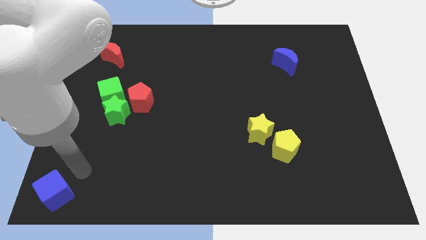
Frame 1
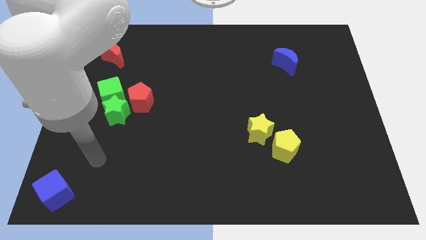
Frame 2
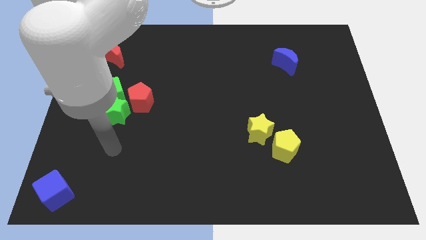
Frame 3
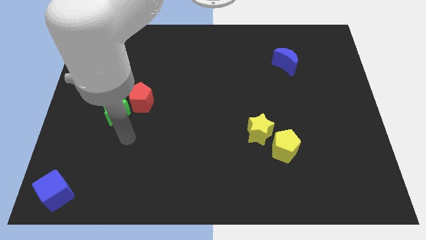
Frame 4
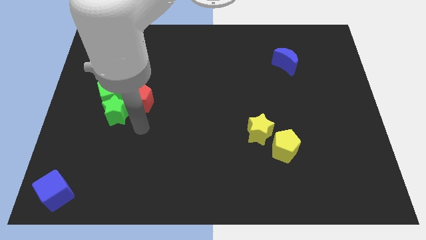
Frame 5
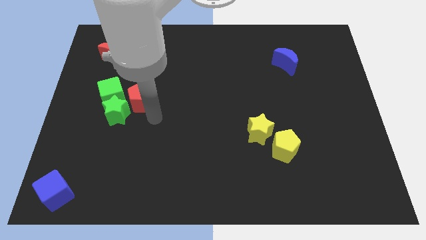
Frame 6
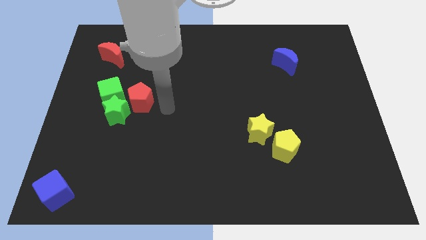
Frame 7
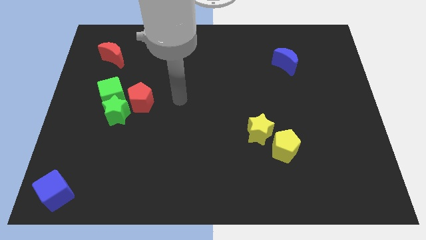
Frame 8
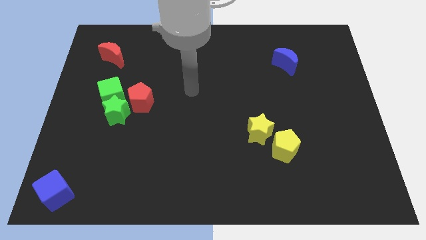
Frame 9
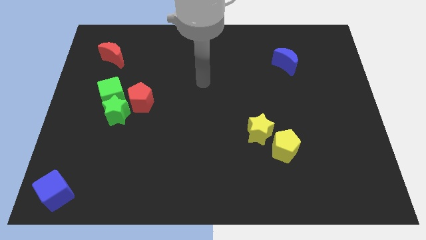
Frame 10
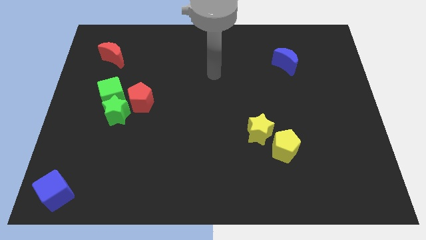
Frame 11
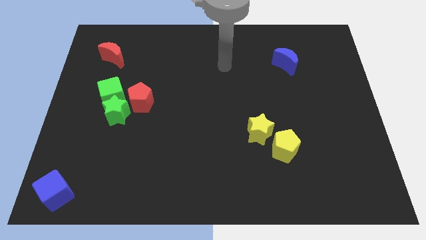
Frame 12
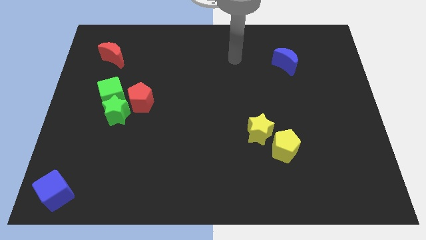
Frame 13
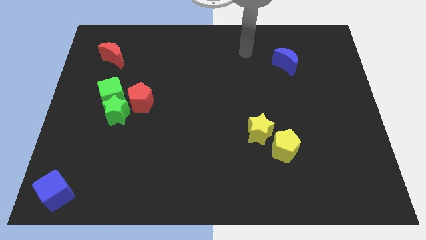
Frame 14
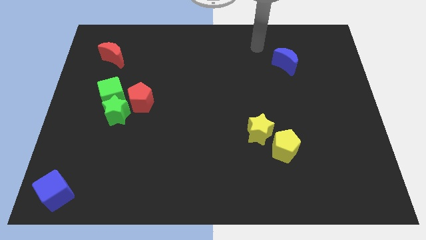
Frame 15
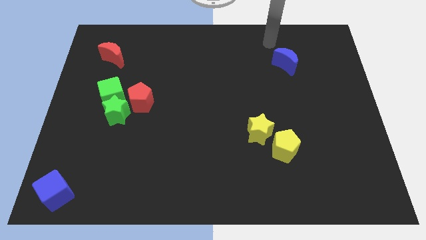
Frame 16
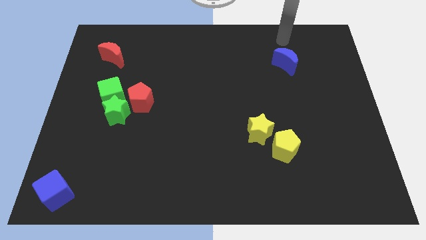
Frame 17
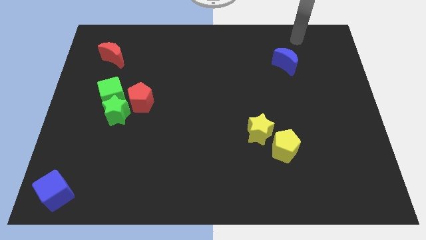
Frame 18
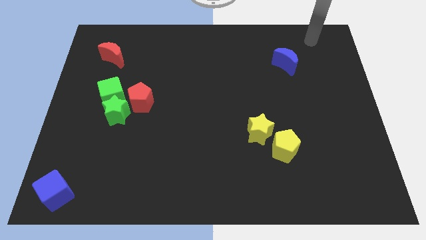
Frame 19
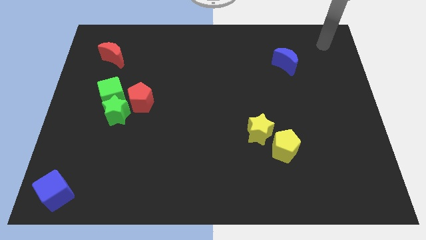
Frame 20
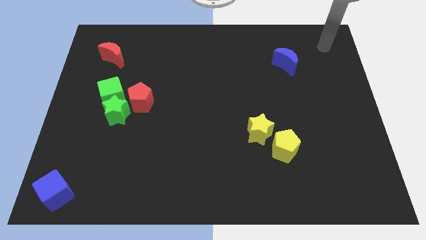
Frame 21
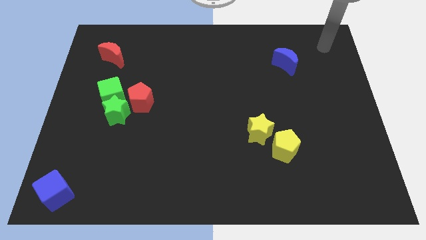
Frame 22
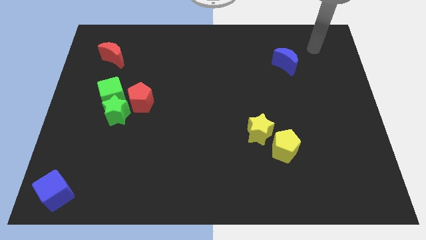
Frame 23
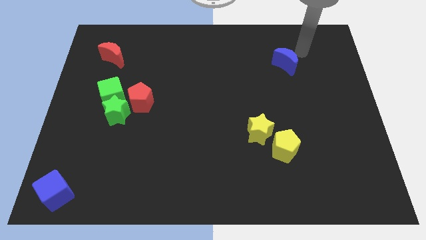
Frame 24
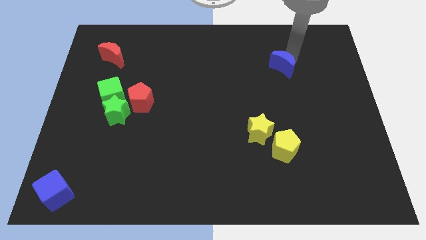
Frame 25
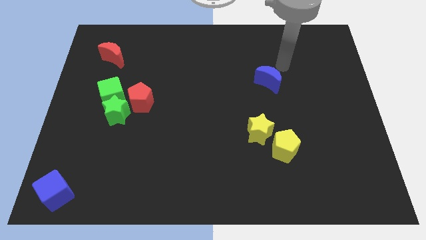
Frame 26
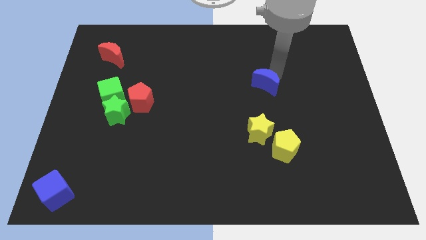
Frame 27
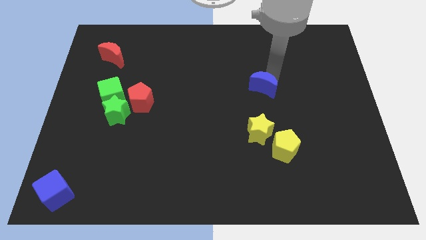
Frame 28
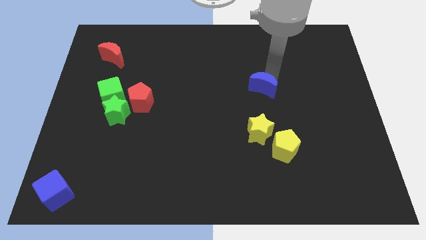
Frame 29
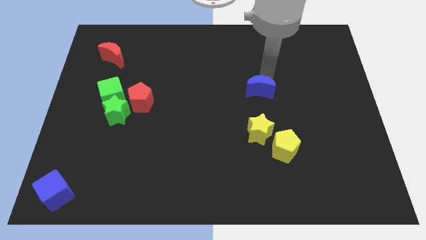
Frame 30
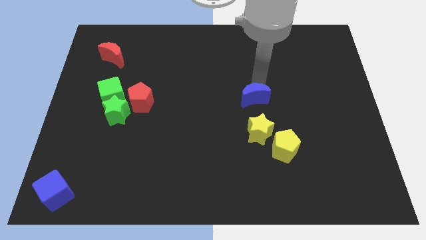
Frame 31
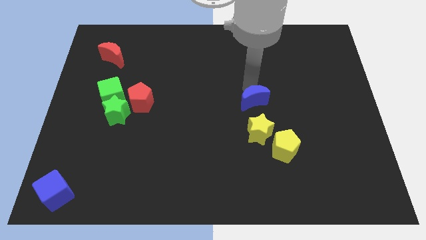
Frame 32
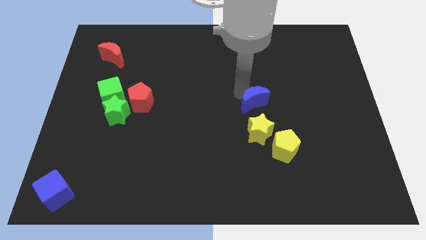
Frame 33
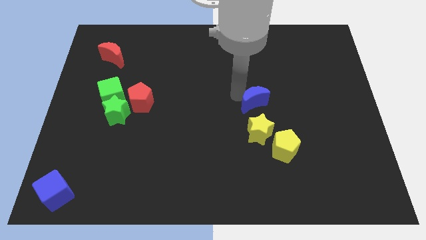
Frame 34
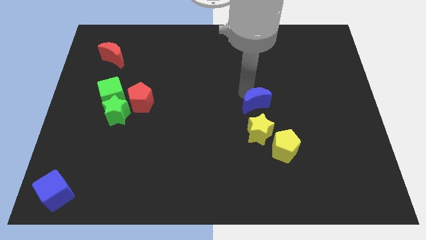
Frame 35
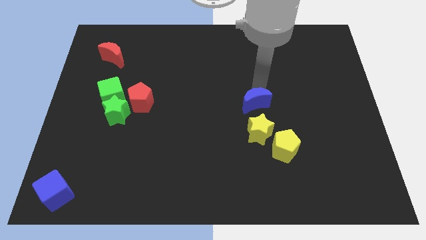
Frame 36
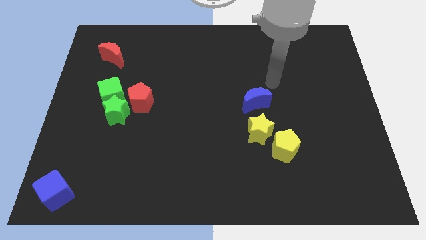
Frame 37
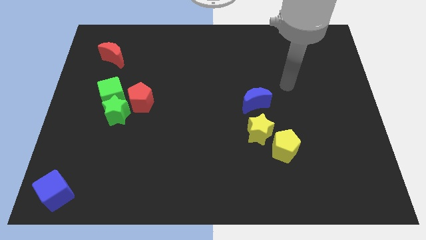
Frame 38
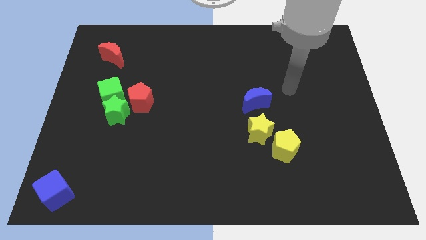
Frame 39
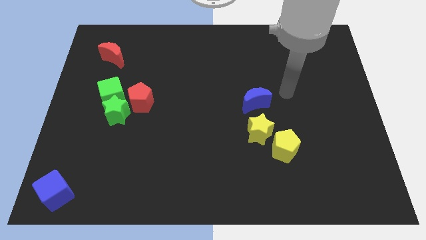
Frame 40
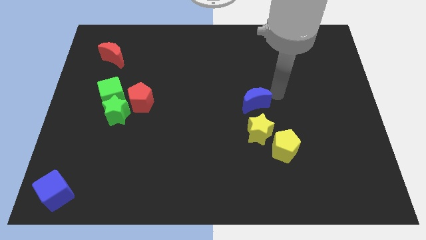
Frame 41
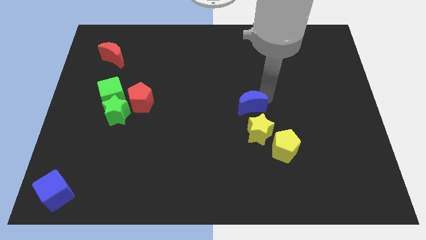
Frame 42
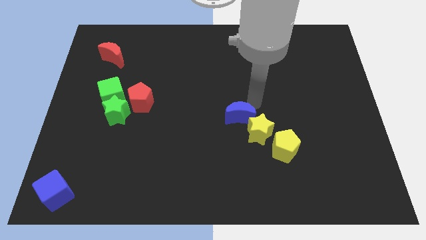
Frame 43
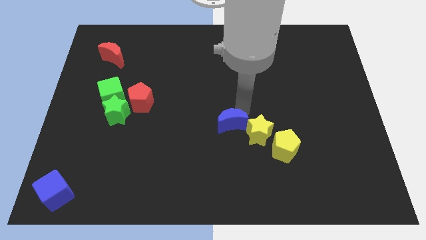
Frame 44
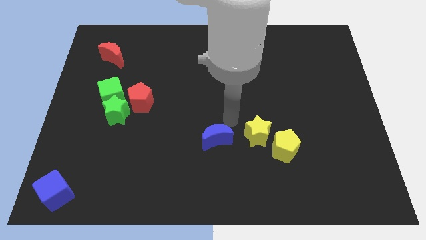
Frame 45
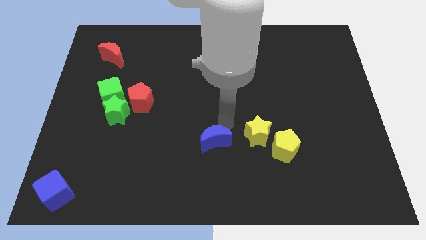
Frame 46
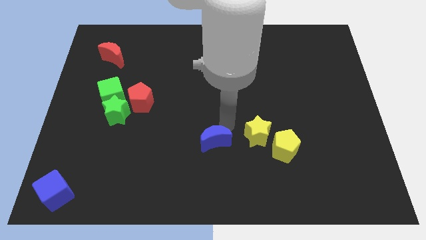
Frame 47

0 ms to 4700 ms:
slide the blue crescent to the left side of the yellow blocks

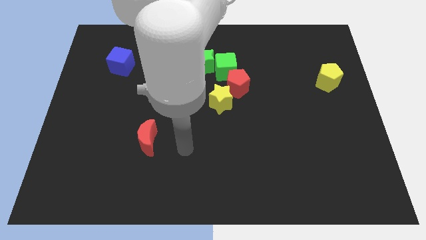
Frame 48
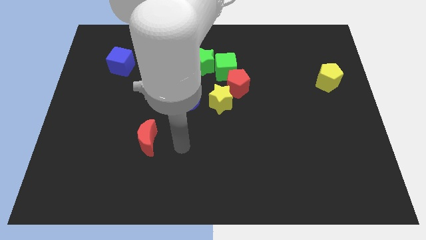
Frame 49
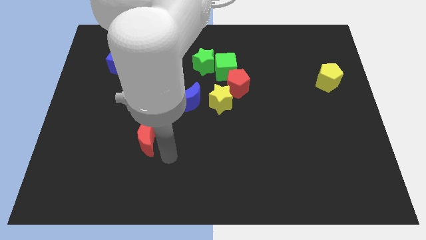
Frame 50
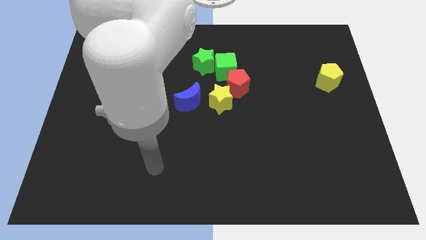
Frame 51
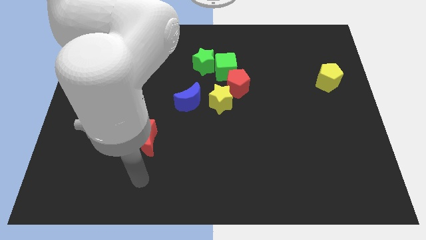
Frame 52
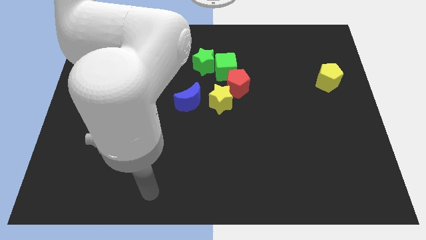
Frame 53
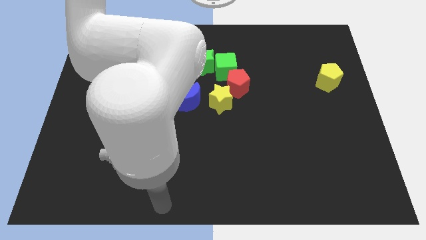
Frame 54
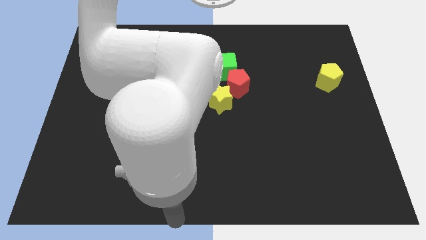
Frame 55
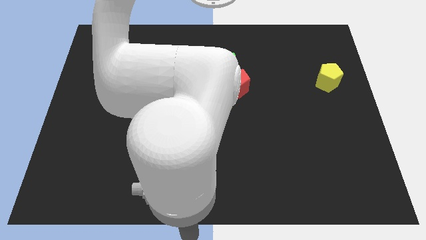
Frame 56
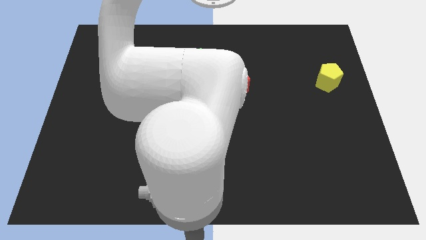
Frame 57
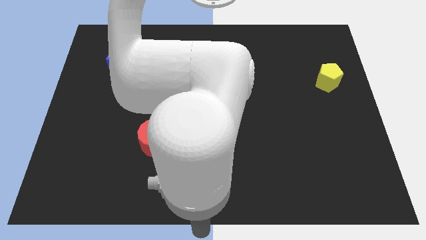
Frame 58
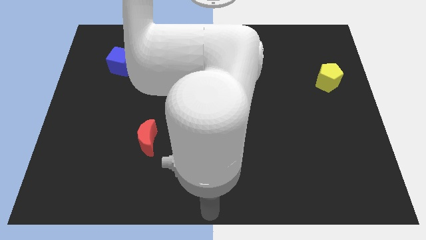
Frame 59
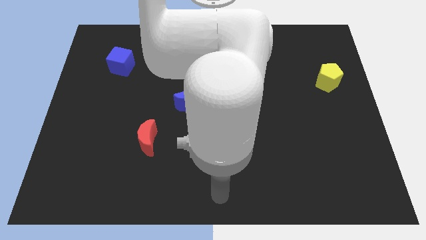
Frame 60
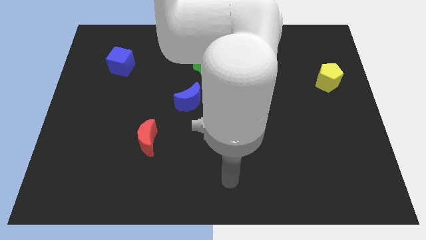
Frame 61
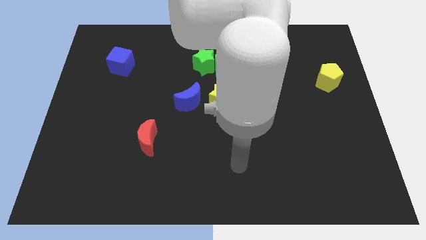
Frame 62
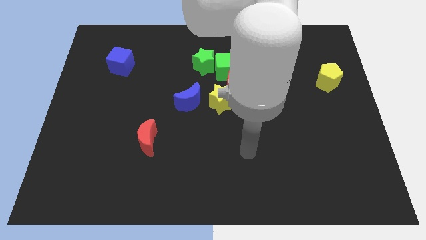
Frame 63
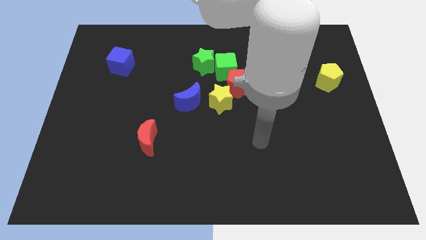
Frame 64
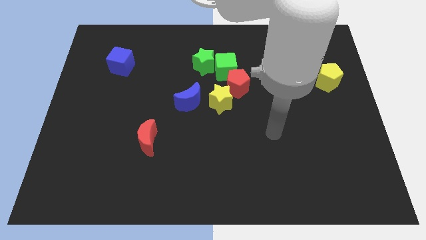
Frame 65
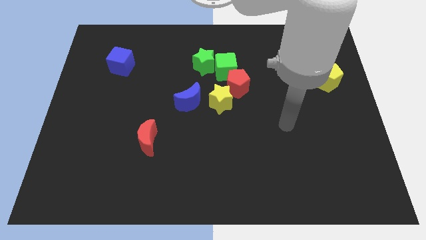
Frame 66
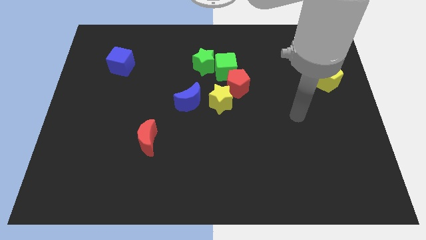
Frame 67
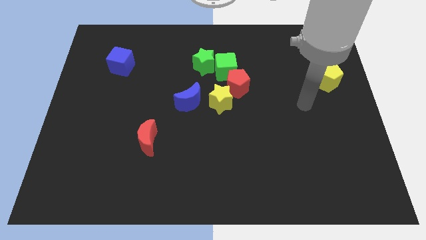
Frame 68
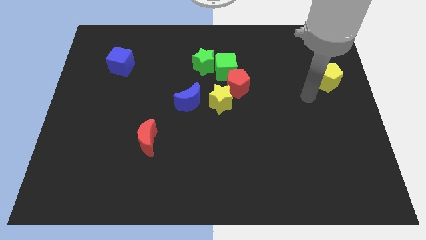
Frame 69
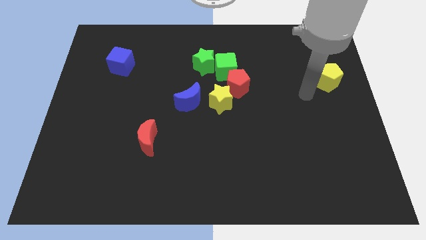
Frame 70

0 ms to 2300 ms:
move your arm close to yellow pentagon

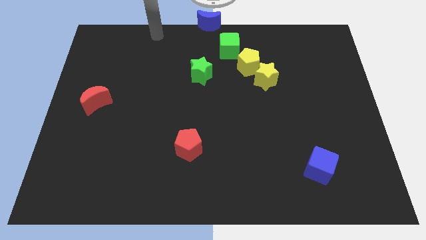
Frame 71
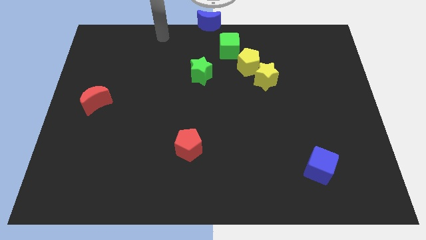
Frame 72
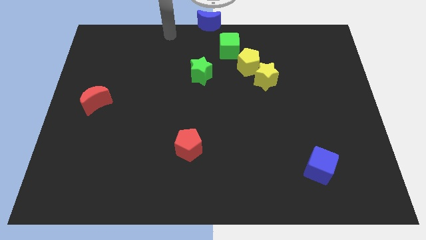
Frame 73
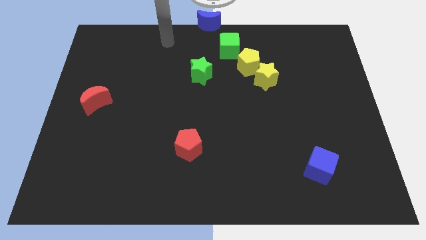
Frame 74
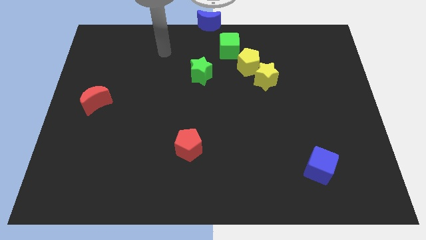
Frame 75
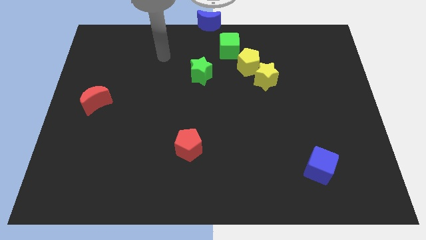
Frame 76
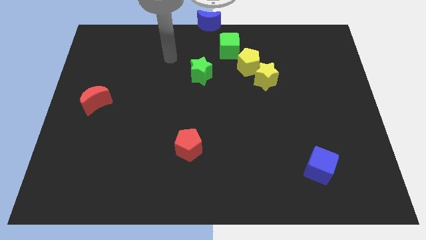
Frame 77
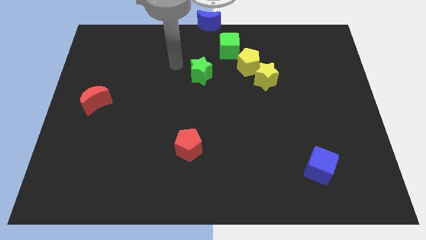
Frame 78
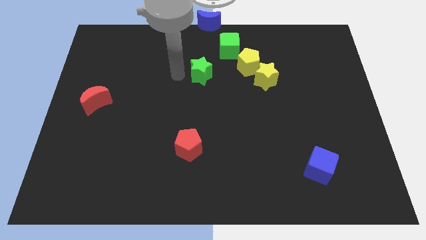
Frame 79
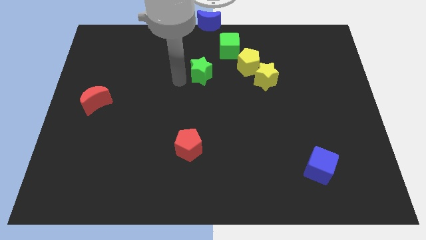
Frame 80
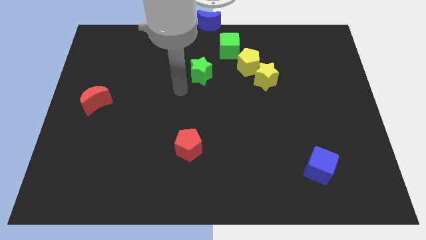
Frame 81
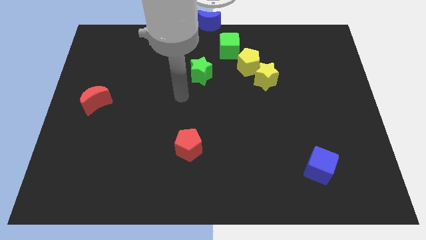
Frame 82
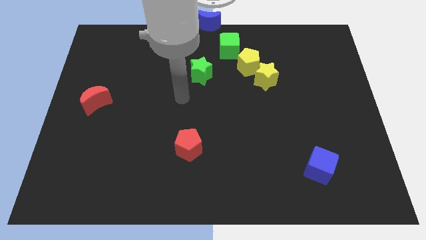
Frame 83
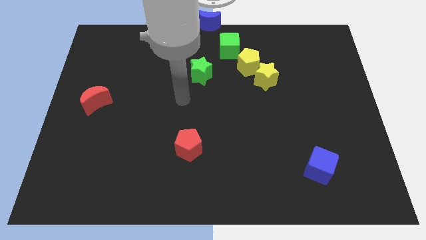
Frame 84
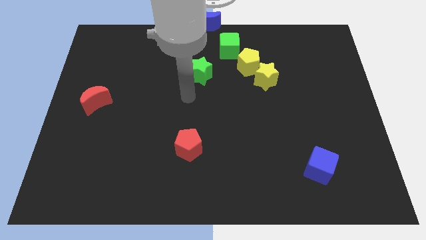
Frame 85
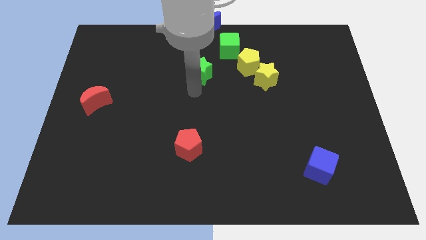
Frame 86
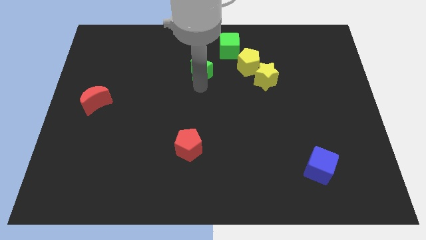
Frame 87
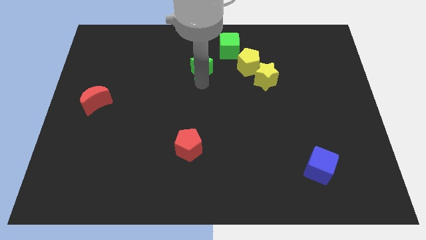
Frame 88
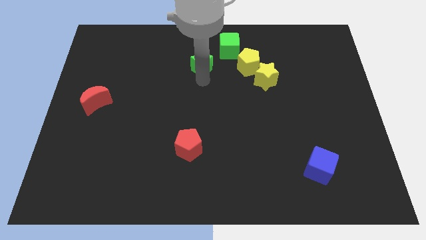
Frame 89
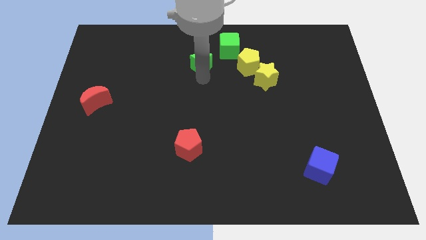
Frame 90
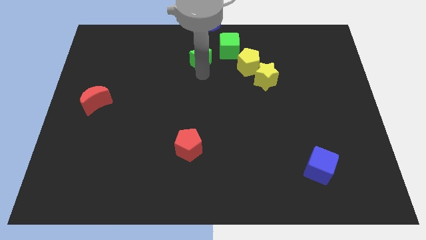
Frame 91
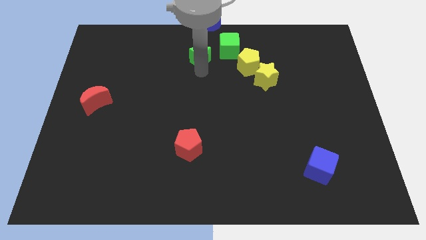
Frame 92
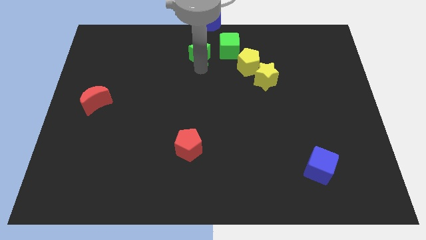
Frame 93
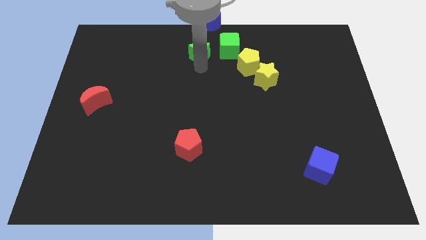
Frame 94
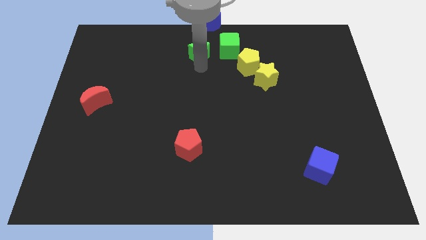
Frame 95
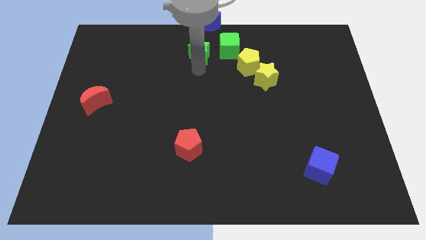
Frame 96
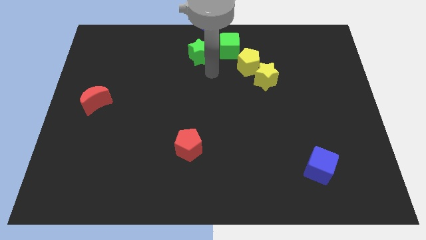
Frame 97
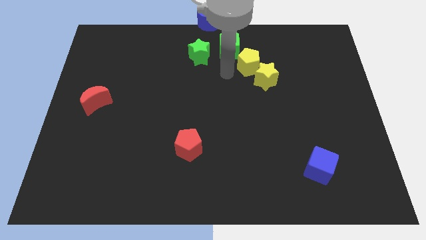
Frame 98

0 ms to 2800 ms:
place the green star diagonally to the left of the green cube
